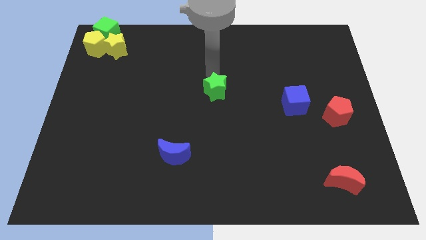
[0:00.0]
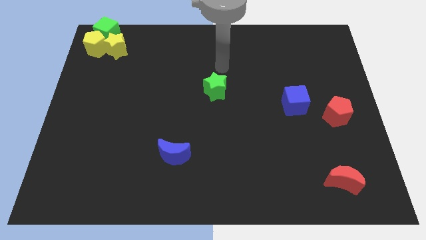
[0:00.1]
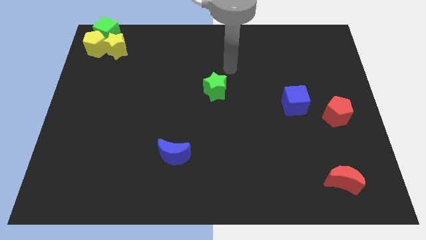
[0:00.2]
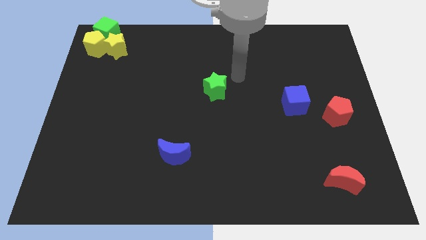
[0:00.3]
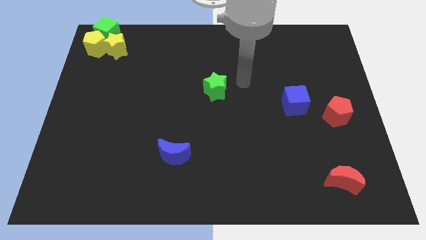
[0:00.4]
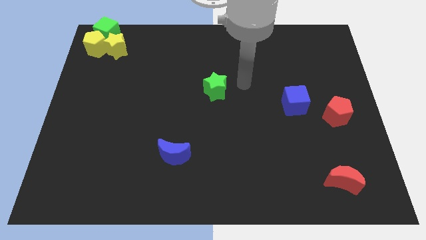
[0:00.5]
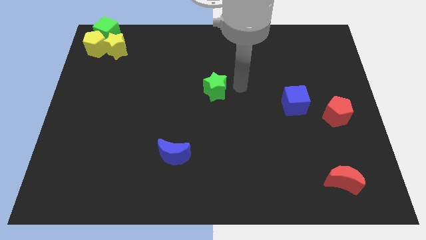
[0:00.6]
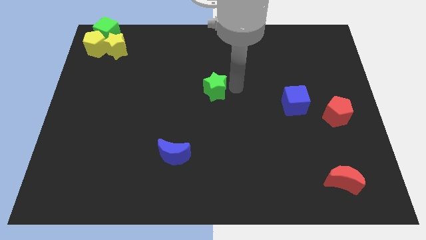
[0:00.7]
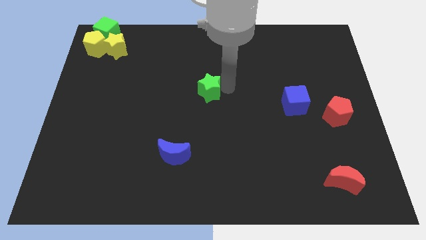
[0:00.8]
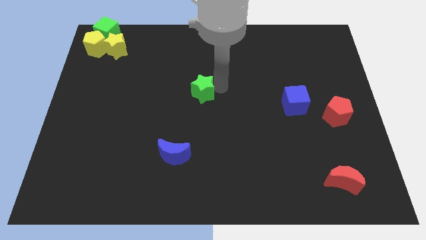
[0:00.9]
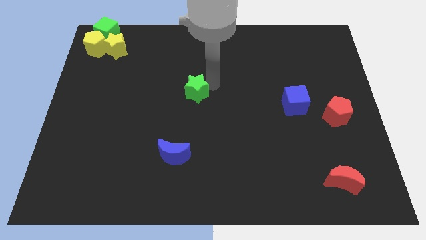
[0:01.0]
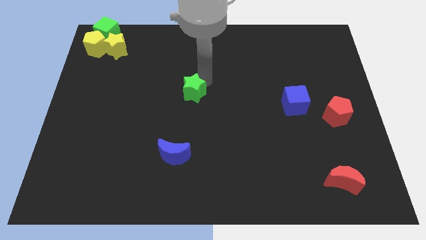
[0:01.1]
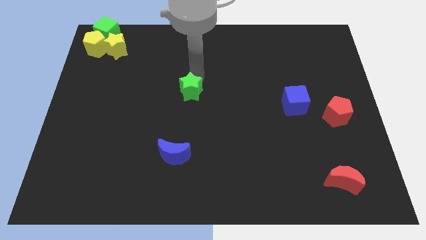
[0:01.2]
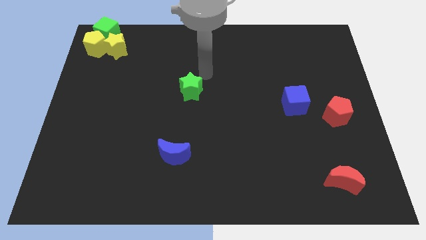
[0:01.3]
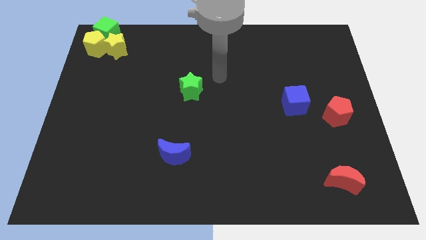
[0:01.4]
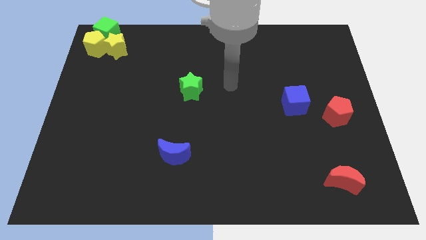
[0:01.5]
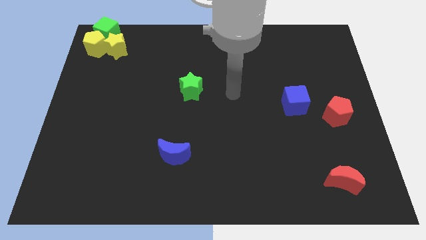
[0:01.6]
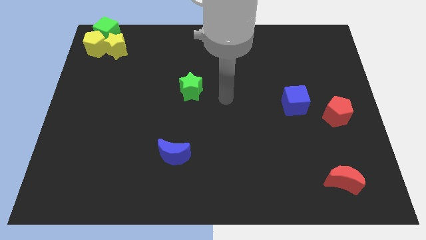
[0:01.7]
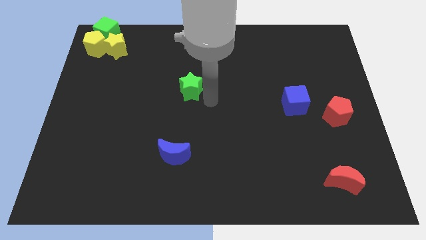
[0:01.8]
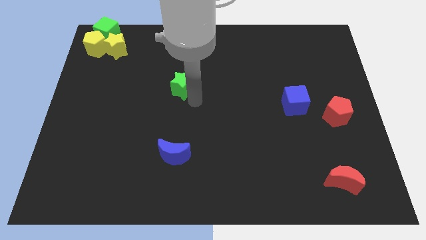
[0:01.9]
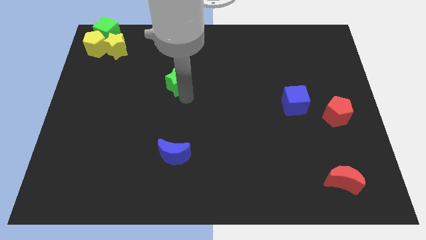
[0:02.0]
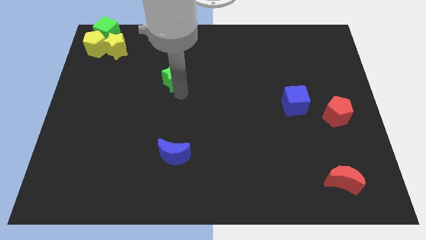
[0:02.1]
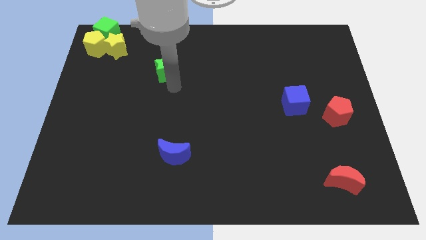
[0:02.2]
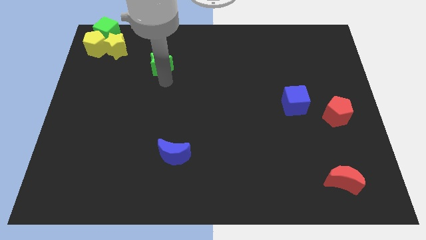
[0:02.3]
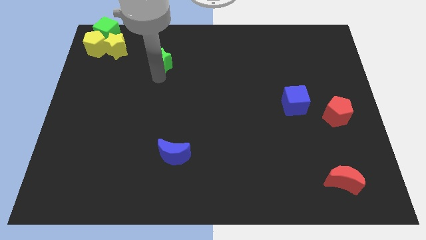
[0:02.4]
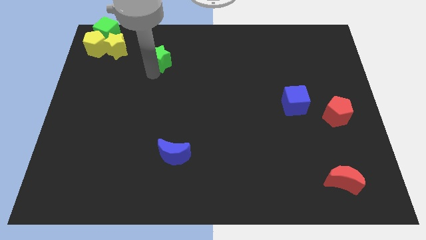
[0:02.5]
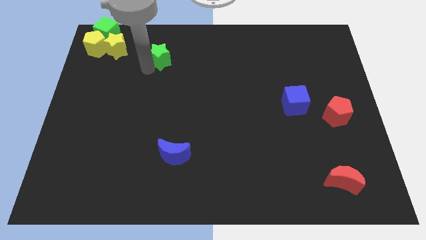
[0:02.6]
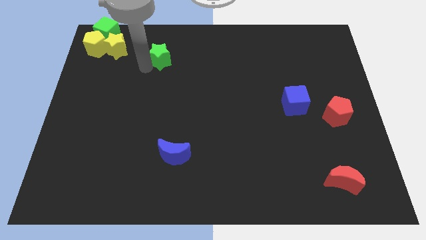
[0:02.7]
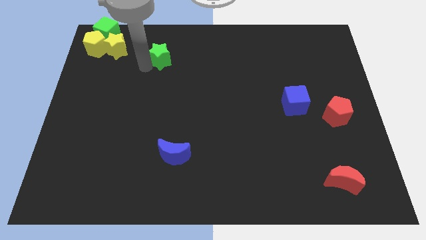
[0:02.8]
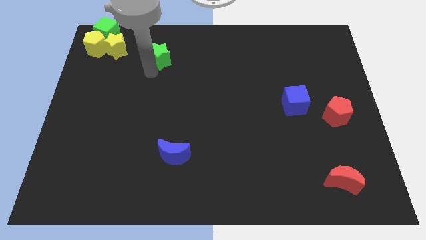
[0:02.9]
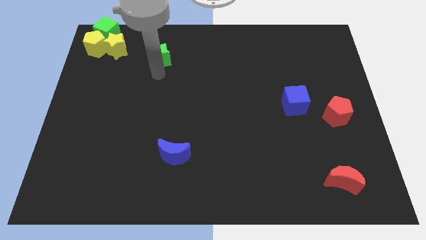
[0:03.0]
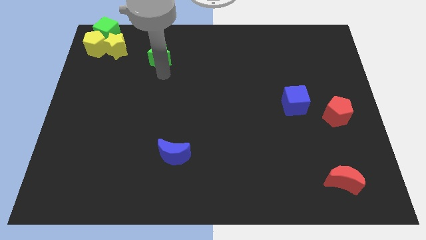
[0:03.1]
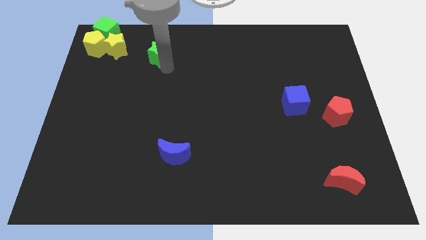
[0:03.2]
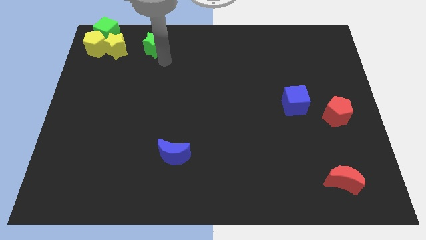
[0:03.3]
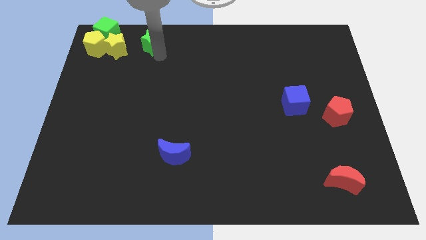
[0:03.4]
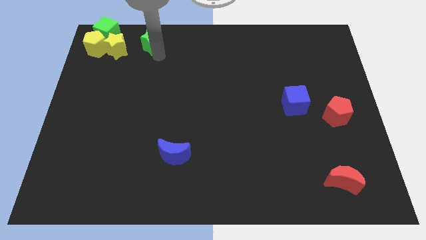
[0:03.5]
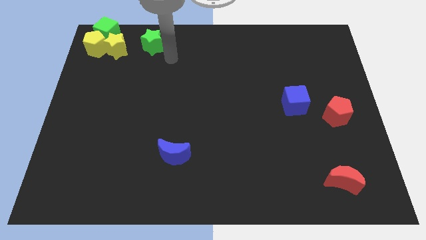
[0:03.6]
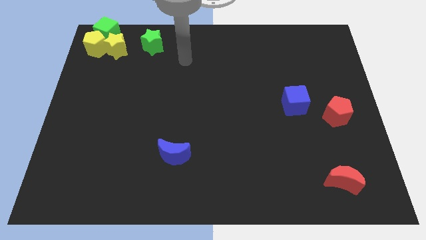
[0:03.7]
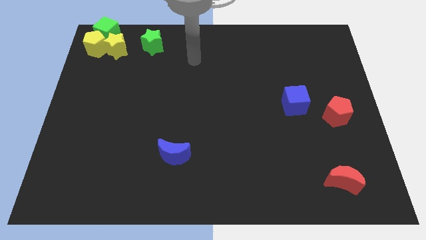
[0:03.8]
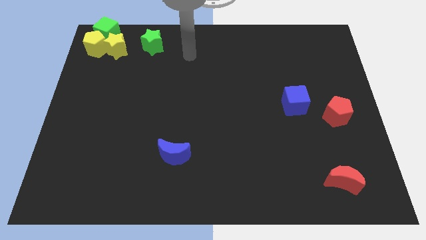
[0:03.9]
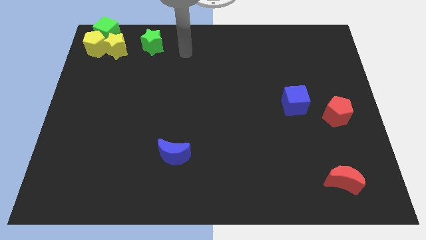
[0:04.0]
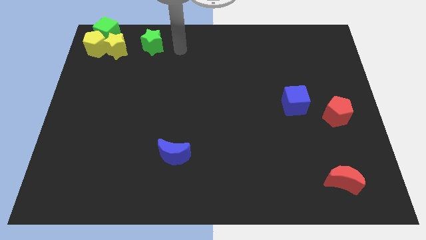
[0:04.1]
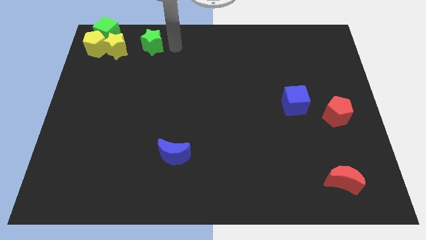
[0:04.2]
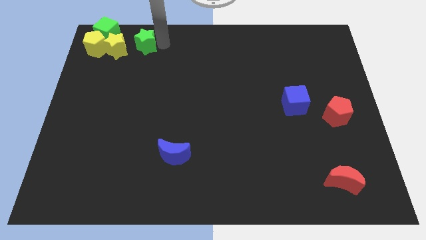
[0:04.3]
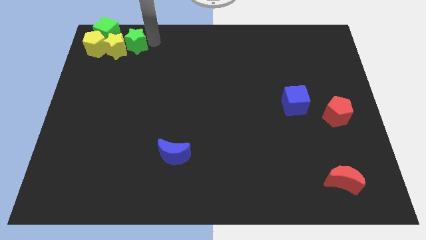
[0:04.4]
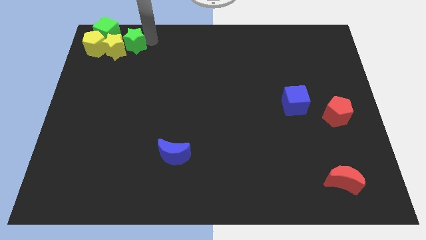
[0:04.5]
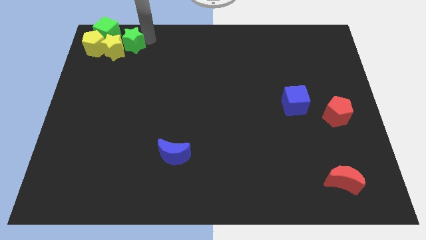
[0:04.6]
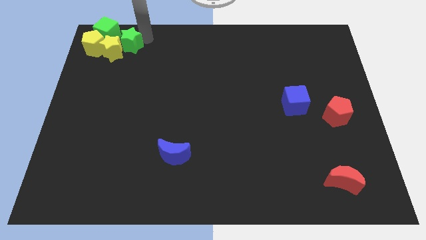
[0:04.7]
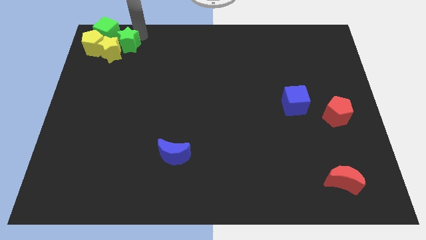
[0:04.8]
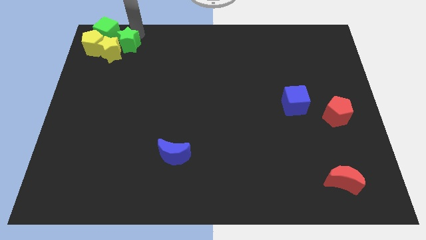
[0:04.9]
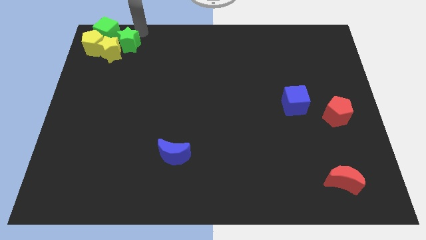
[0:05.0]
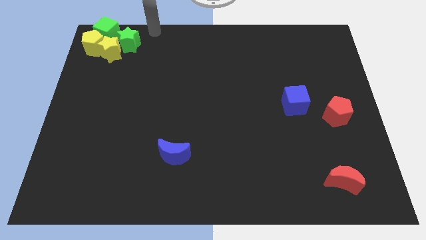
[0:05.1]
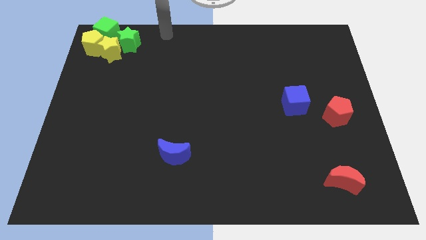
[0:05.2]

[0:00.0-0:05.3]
group up the two green blocks at the top left corner

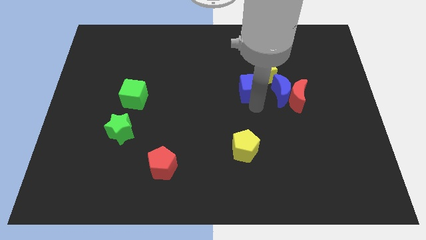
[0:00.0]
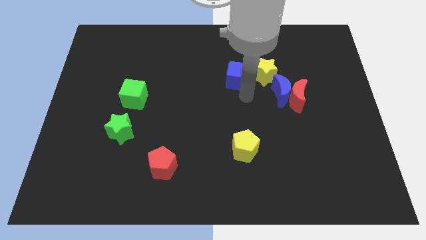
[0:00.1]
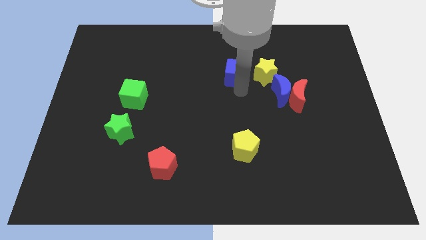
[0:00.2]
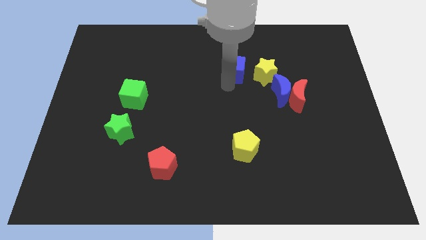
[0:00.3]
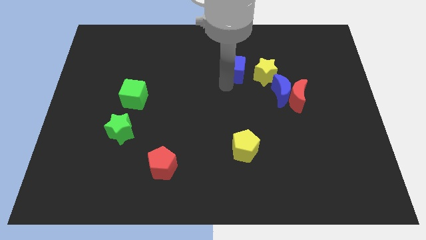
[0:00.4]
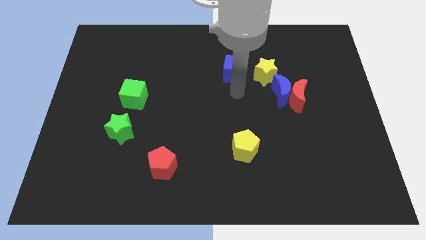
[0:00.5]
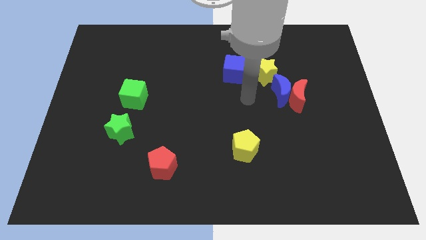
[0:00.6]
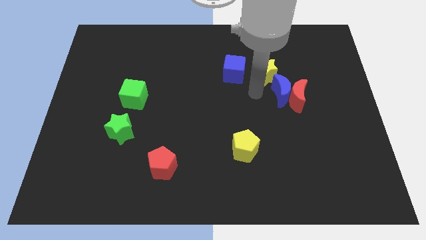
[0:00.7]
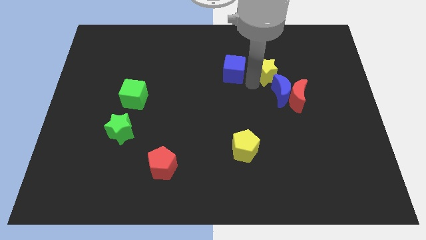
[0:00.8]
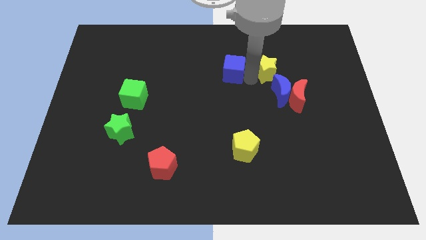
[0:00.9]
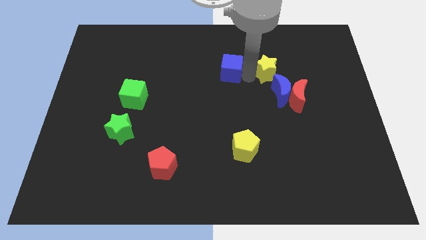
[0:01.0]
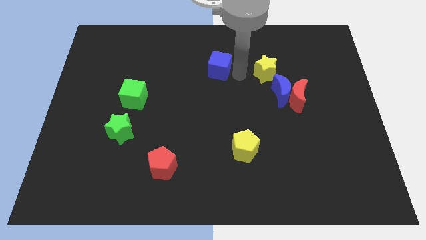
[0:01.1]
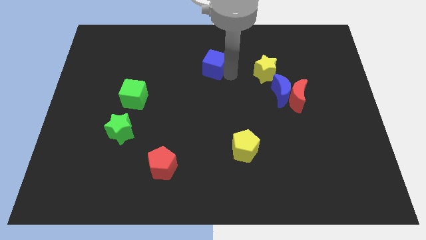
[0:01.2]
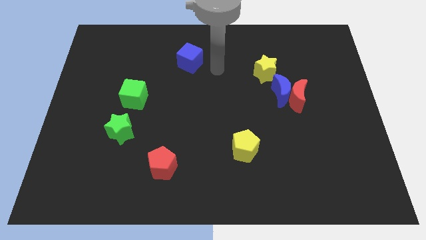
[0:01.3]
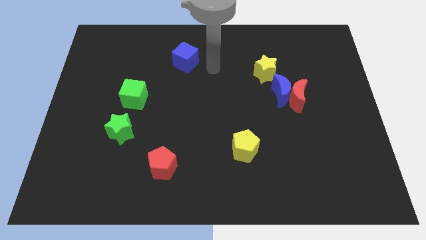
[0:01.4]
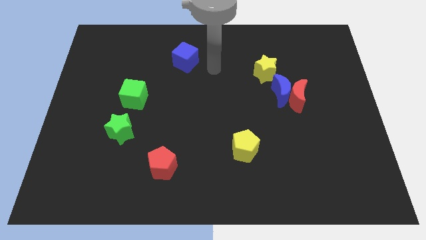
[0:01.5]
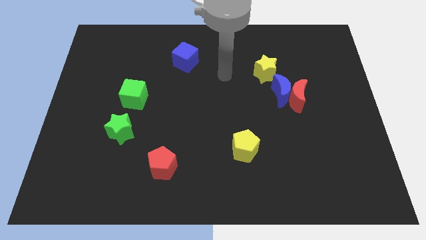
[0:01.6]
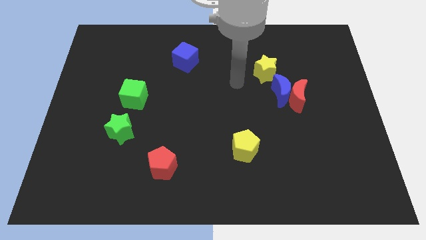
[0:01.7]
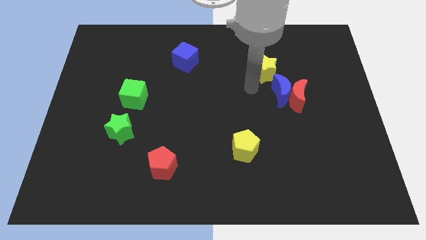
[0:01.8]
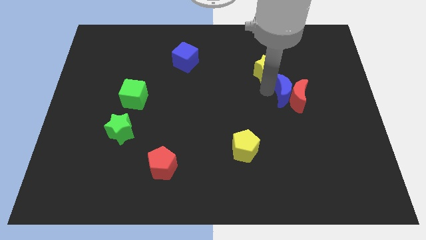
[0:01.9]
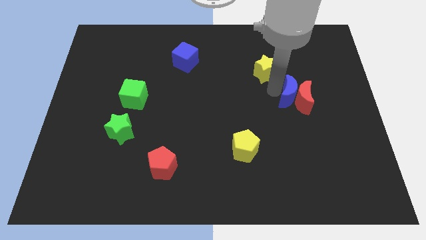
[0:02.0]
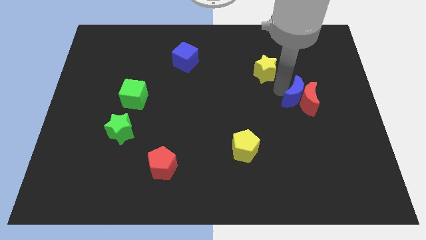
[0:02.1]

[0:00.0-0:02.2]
separate blue cube from yellow star

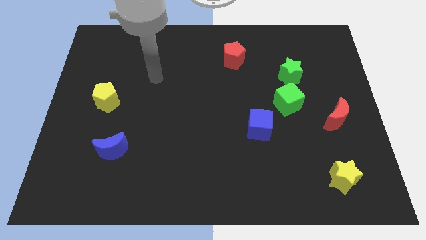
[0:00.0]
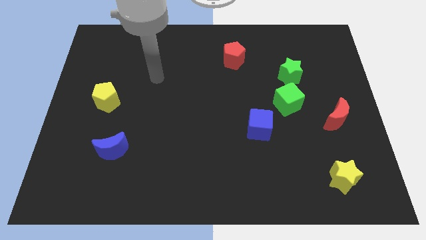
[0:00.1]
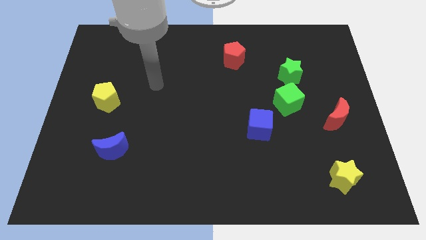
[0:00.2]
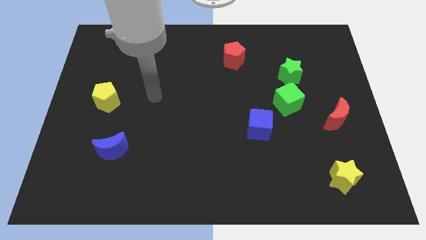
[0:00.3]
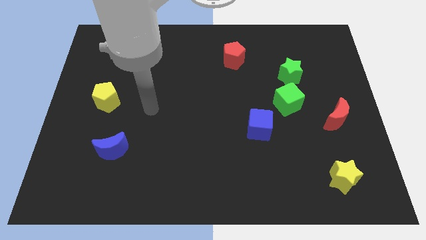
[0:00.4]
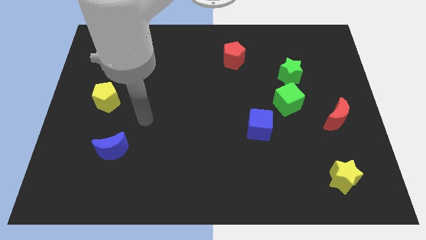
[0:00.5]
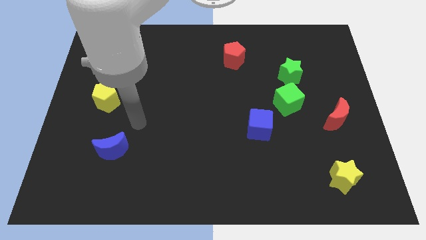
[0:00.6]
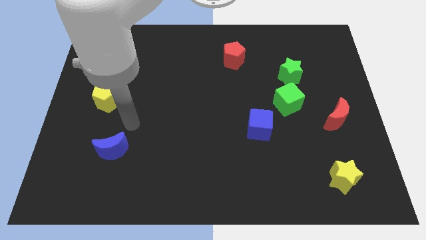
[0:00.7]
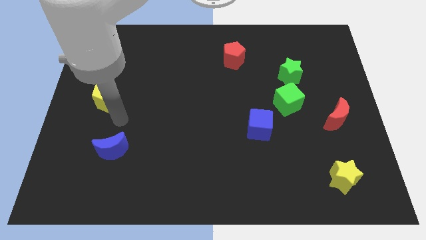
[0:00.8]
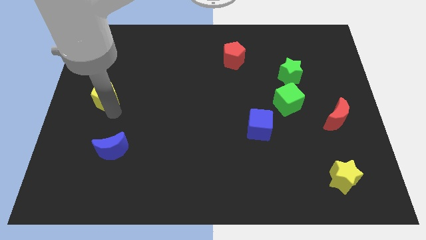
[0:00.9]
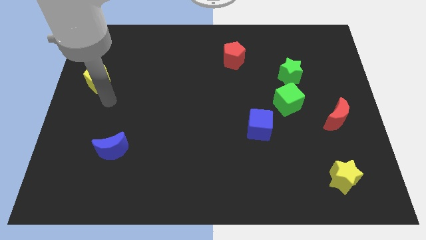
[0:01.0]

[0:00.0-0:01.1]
tap the yellow star

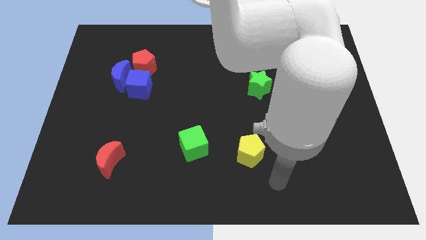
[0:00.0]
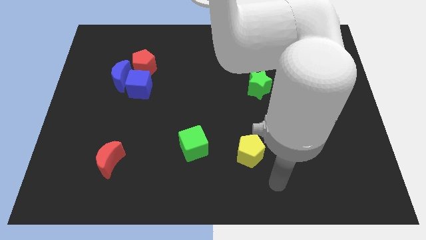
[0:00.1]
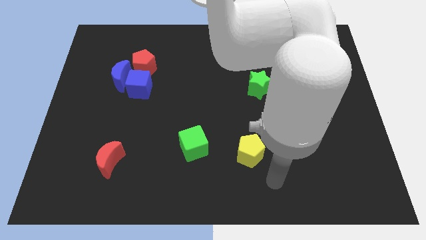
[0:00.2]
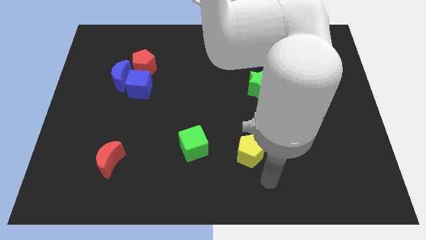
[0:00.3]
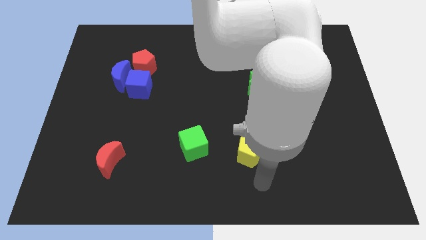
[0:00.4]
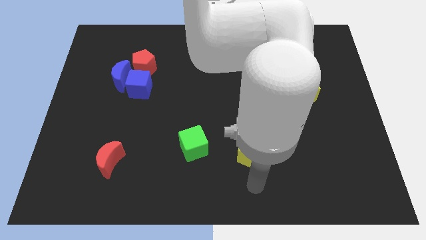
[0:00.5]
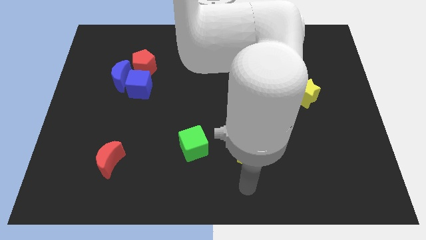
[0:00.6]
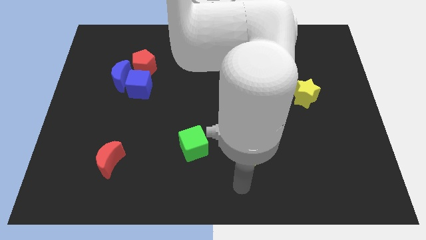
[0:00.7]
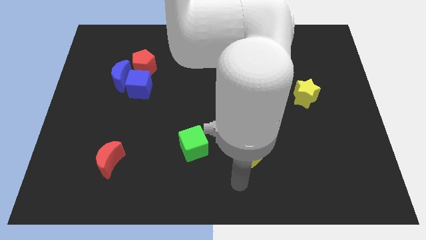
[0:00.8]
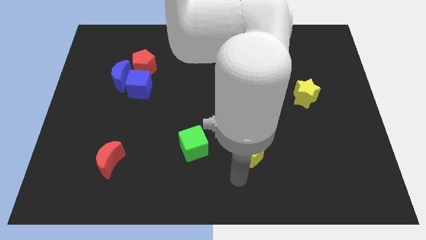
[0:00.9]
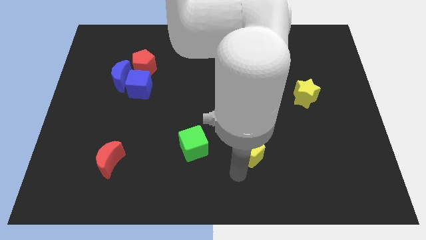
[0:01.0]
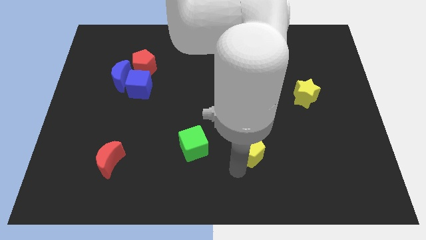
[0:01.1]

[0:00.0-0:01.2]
move your arm towards the bottom of yellow pentagon
